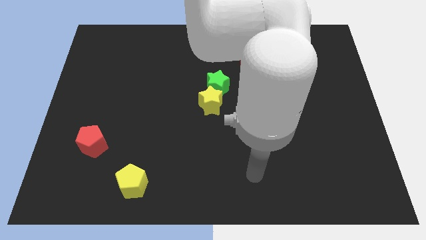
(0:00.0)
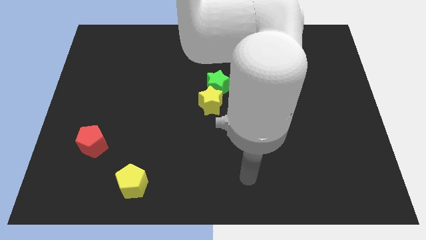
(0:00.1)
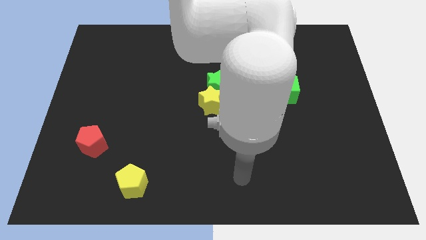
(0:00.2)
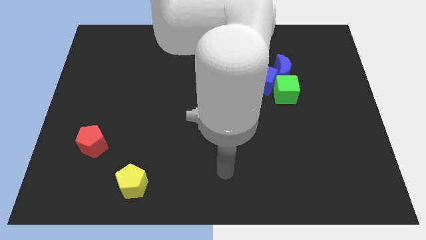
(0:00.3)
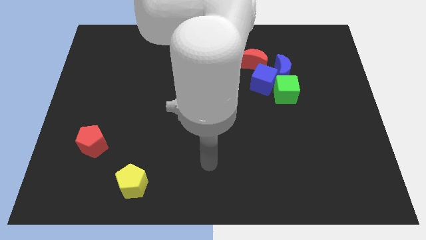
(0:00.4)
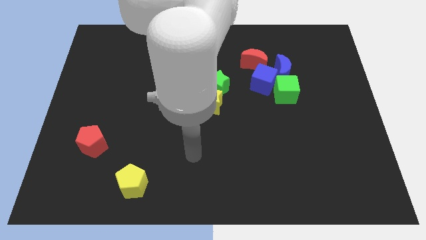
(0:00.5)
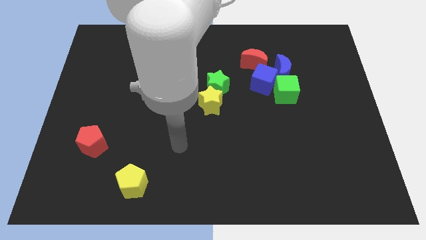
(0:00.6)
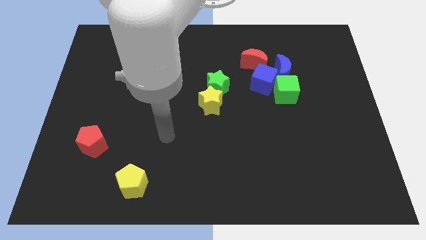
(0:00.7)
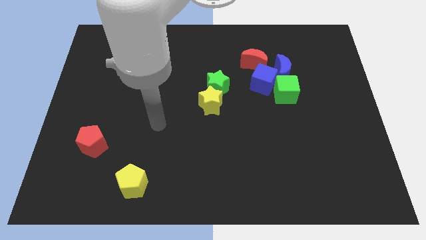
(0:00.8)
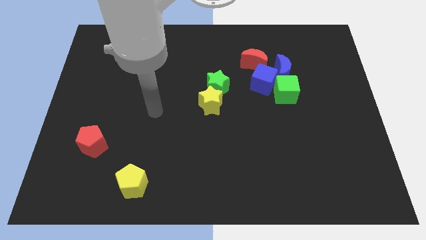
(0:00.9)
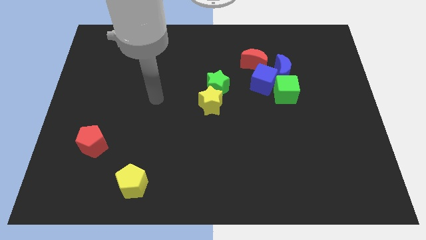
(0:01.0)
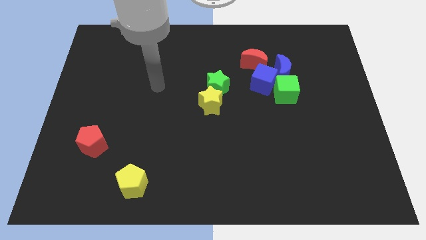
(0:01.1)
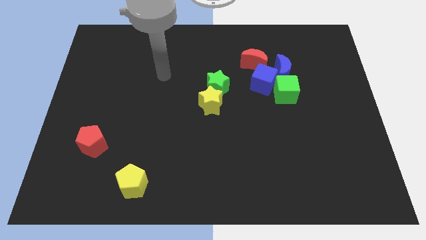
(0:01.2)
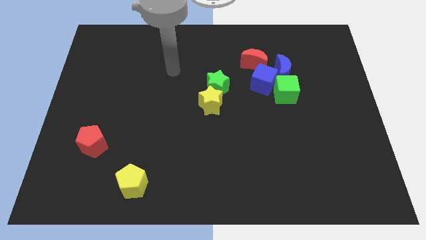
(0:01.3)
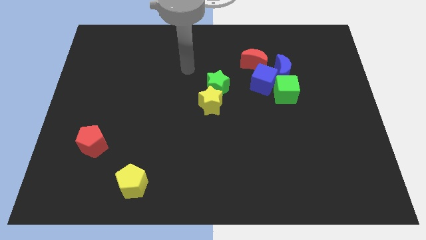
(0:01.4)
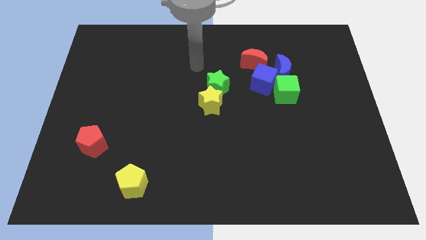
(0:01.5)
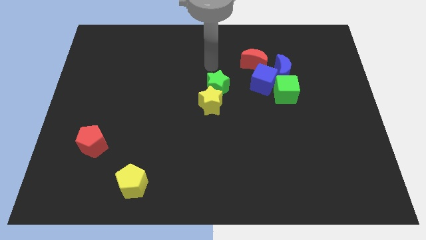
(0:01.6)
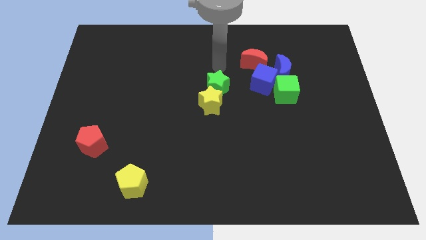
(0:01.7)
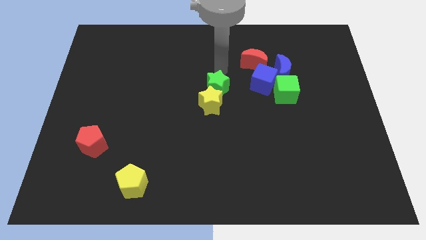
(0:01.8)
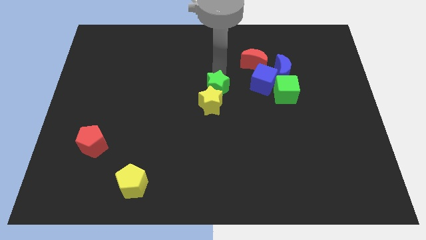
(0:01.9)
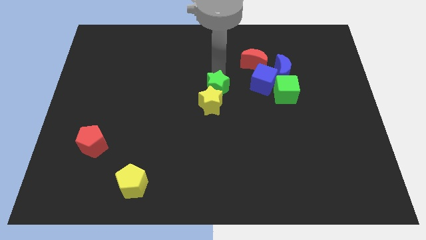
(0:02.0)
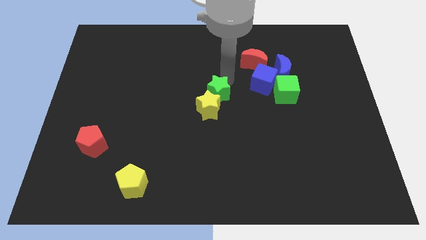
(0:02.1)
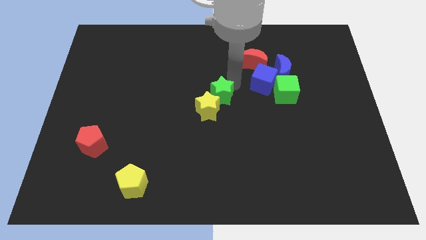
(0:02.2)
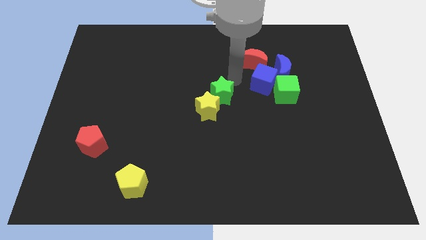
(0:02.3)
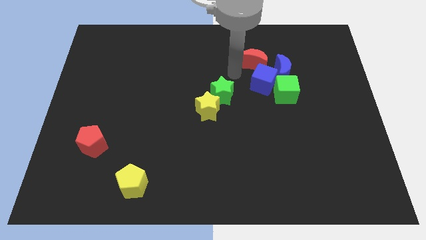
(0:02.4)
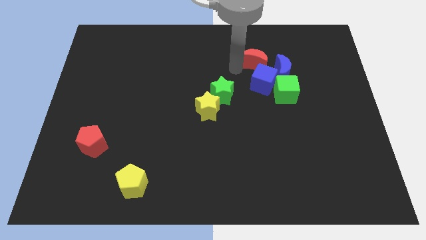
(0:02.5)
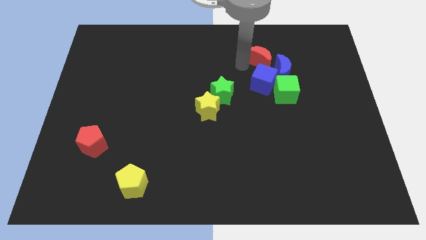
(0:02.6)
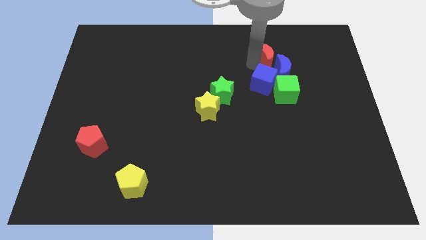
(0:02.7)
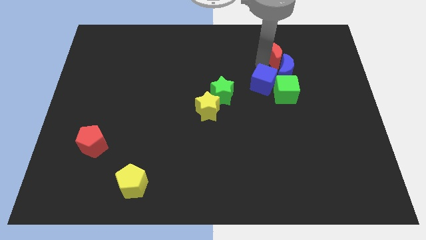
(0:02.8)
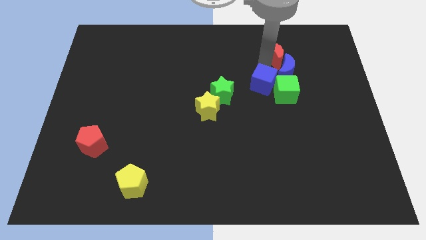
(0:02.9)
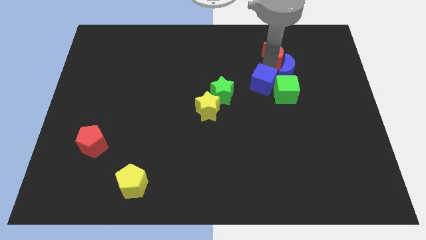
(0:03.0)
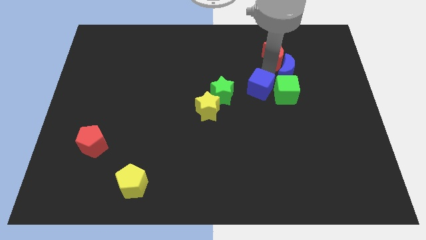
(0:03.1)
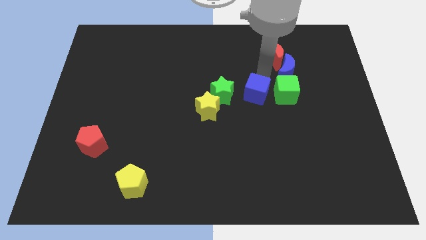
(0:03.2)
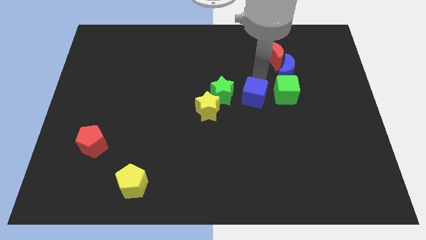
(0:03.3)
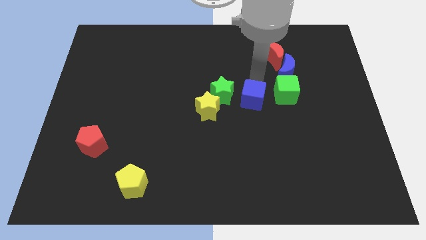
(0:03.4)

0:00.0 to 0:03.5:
move your arm towards the green star

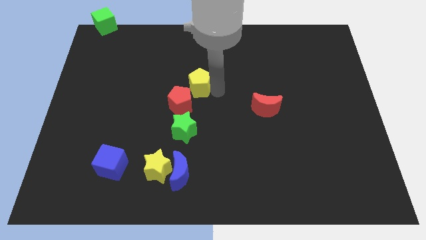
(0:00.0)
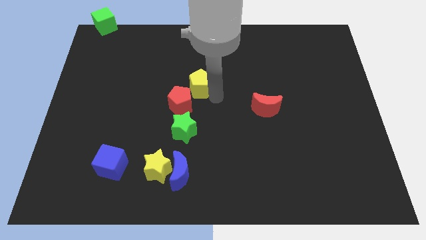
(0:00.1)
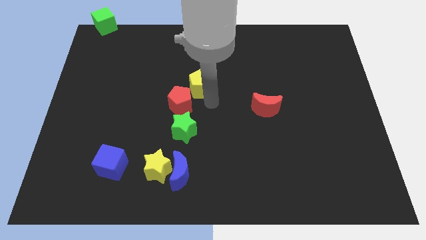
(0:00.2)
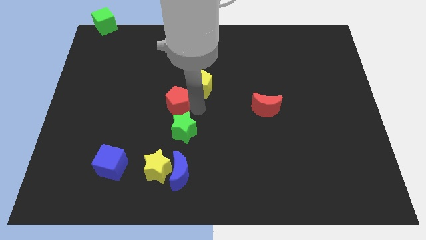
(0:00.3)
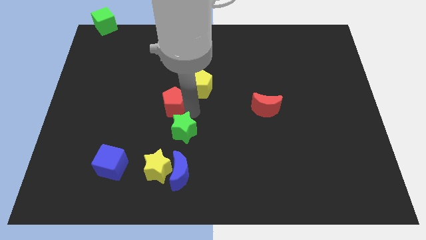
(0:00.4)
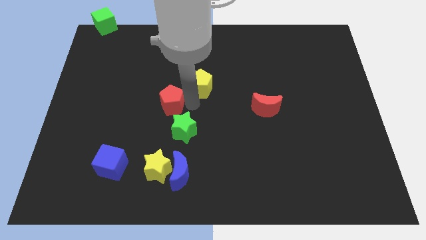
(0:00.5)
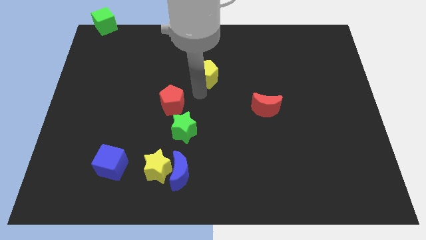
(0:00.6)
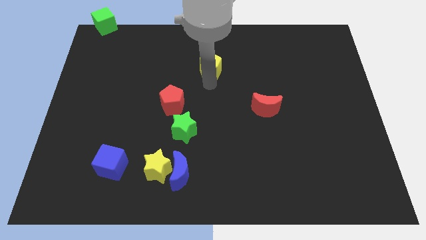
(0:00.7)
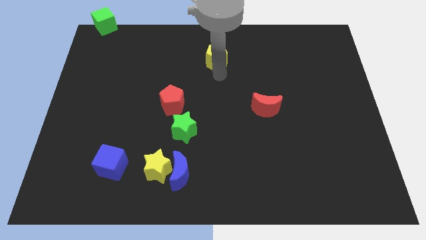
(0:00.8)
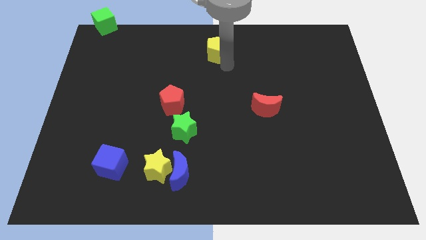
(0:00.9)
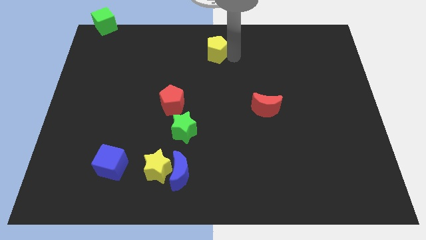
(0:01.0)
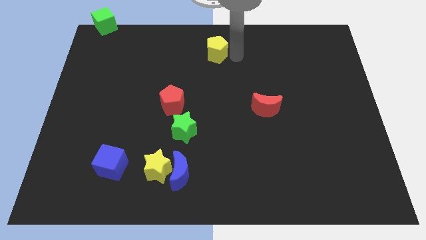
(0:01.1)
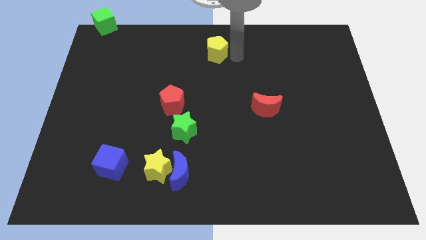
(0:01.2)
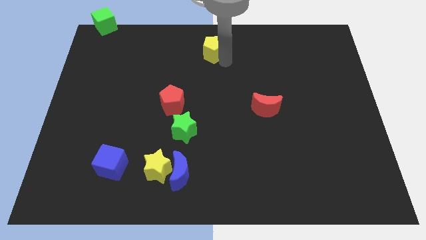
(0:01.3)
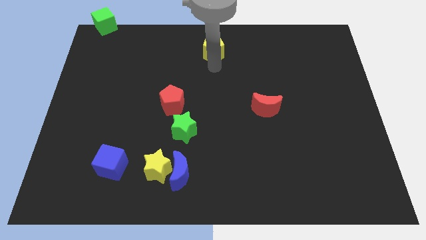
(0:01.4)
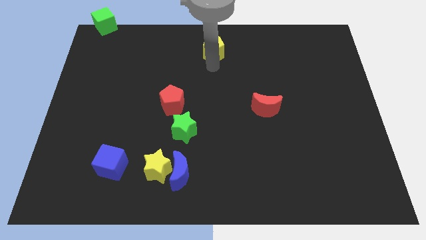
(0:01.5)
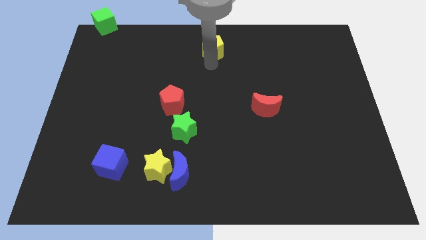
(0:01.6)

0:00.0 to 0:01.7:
move the yellow pentagon up slightly

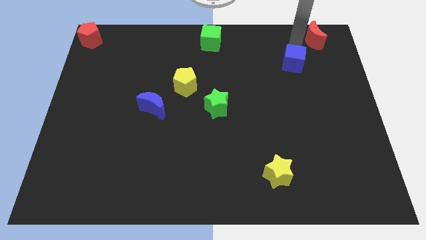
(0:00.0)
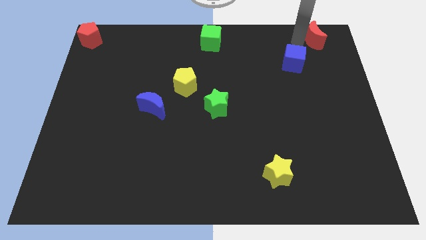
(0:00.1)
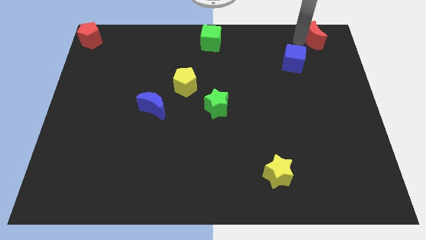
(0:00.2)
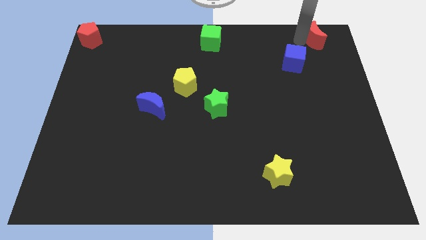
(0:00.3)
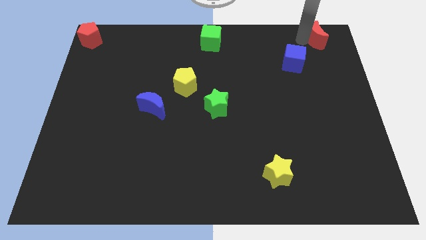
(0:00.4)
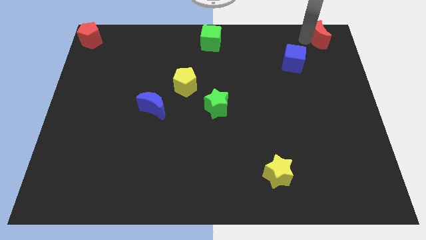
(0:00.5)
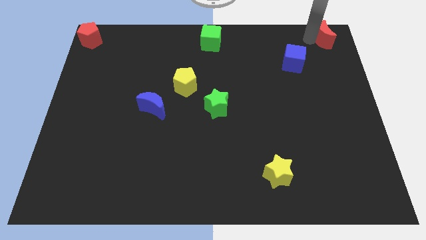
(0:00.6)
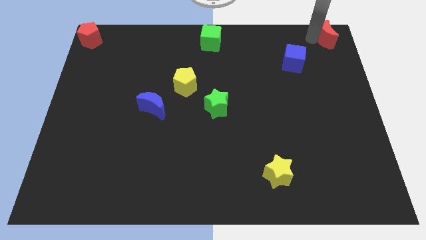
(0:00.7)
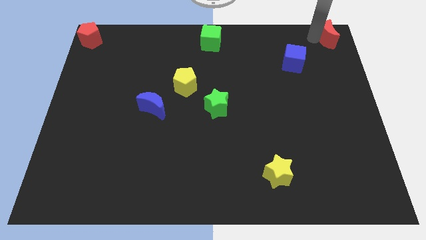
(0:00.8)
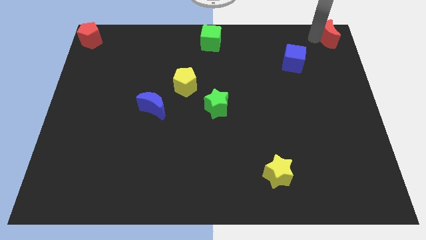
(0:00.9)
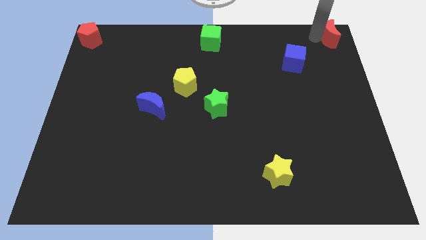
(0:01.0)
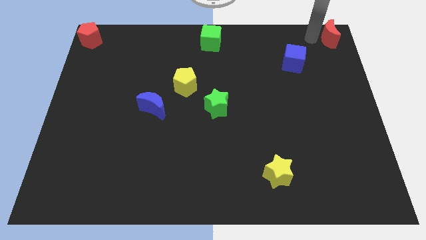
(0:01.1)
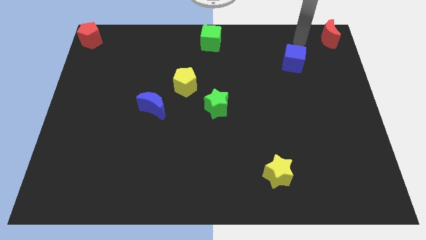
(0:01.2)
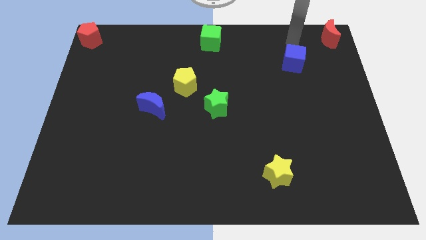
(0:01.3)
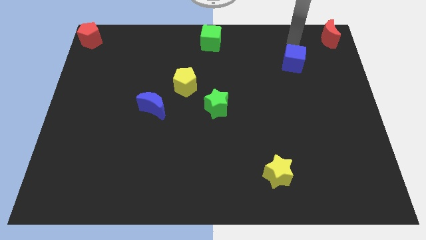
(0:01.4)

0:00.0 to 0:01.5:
push the red crescent to the top right corner of the board

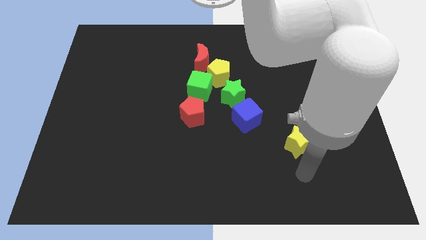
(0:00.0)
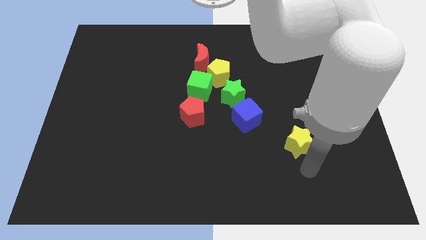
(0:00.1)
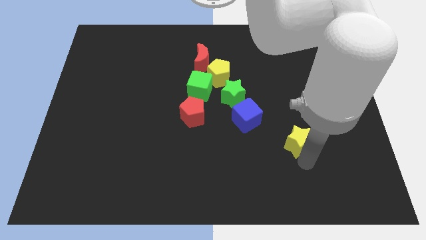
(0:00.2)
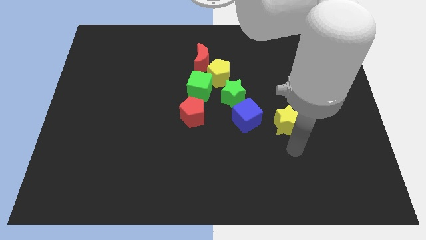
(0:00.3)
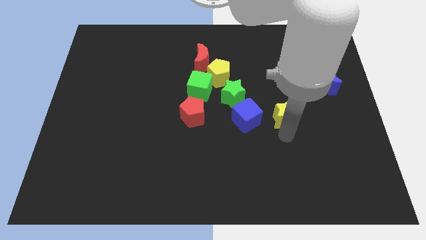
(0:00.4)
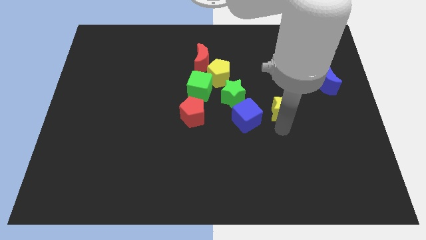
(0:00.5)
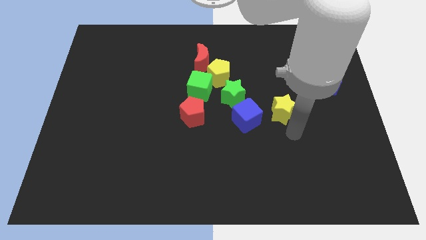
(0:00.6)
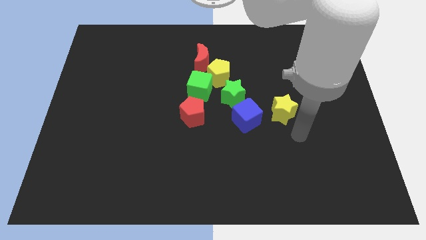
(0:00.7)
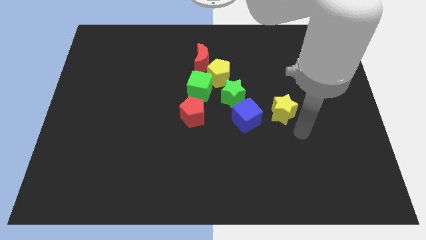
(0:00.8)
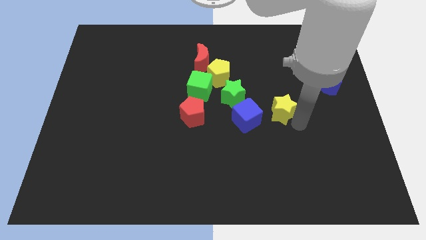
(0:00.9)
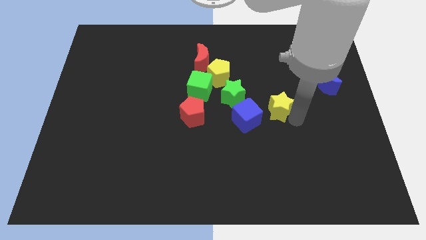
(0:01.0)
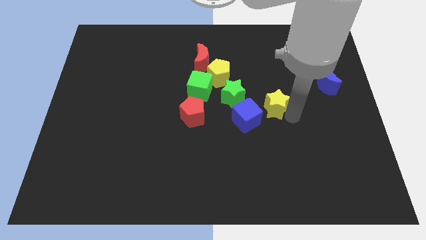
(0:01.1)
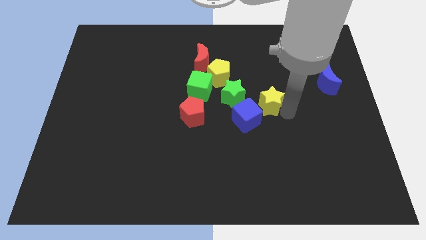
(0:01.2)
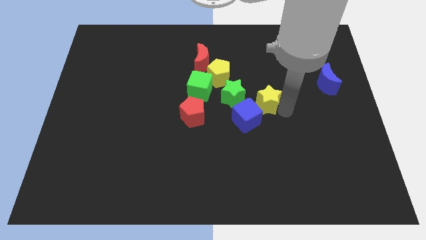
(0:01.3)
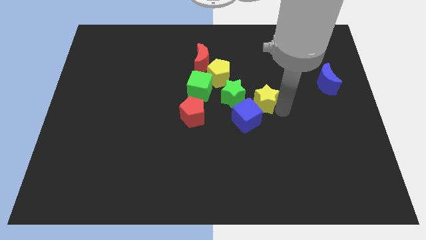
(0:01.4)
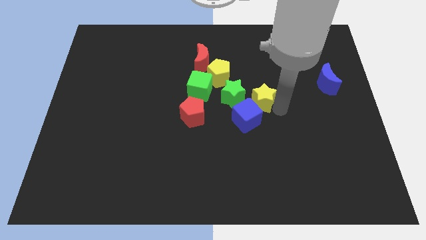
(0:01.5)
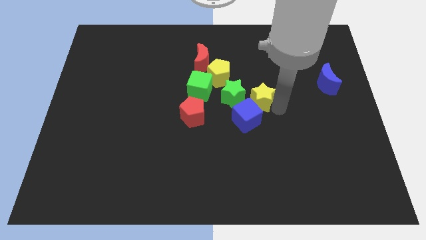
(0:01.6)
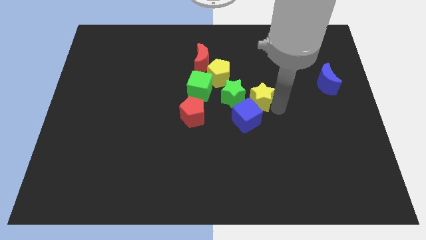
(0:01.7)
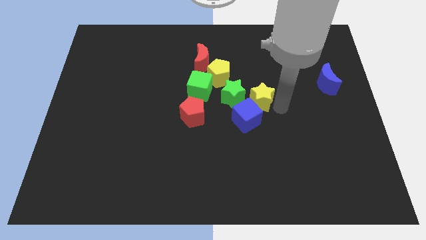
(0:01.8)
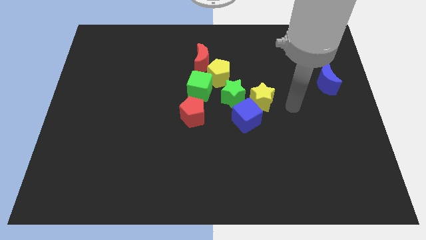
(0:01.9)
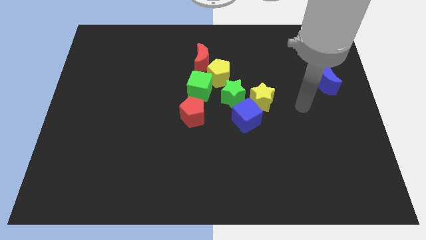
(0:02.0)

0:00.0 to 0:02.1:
place the yellow star right to the green star
